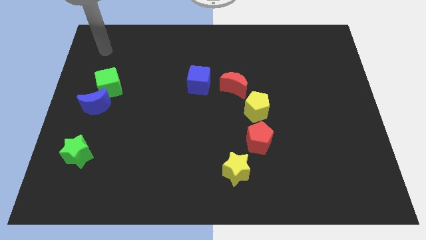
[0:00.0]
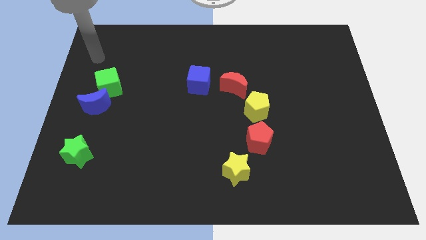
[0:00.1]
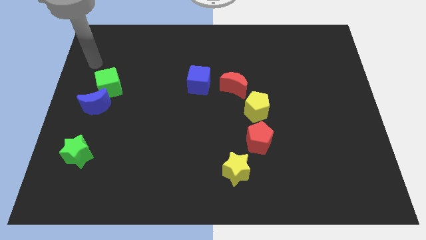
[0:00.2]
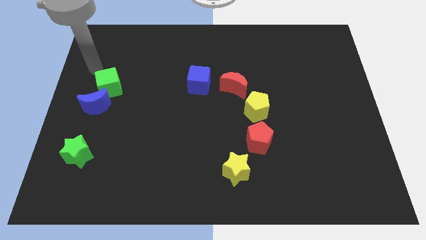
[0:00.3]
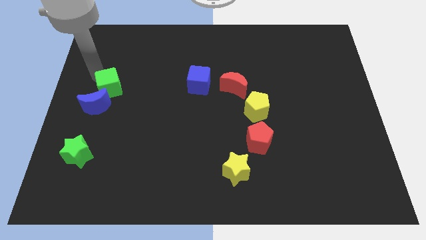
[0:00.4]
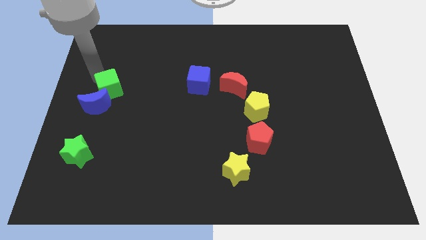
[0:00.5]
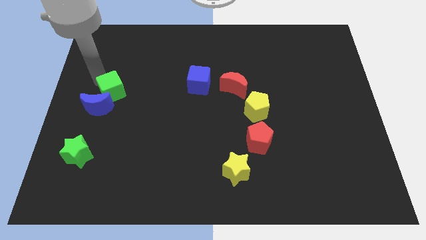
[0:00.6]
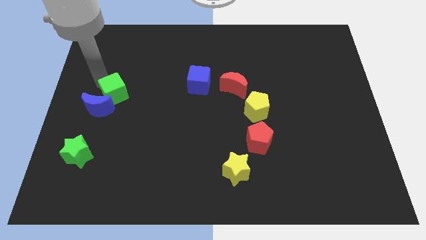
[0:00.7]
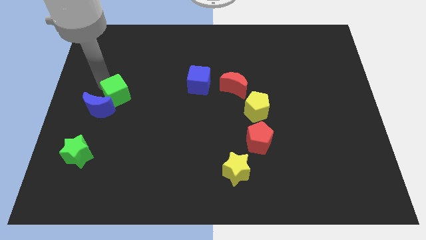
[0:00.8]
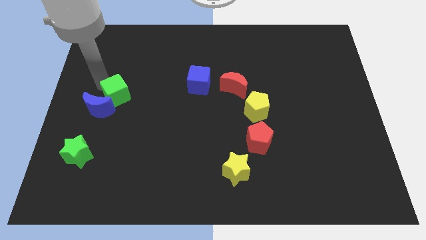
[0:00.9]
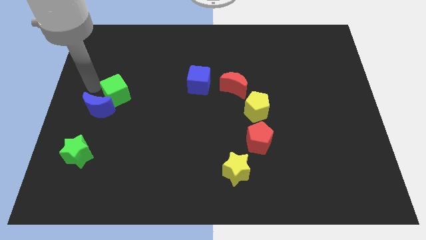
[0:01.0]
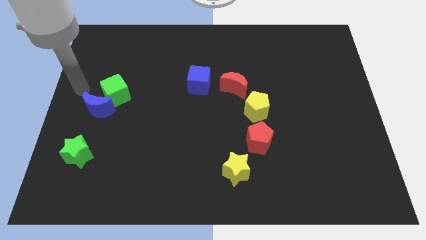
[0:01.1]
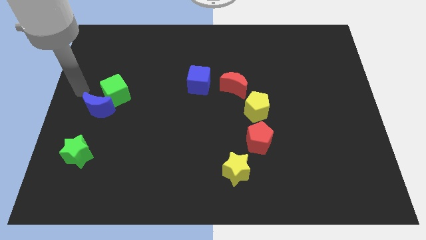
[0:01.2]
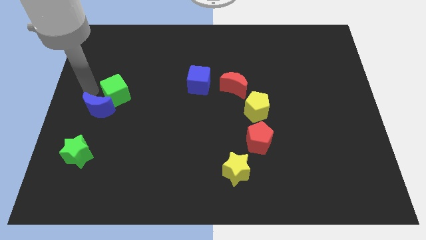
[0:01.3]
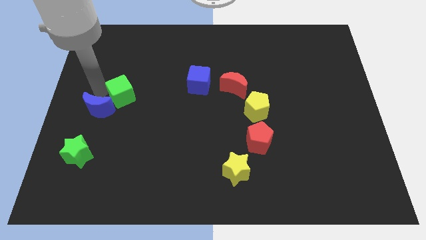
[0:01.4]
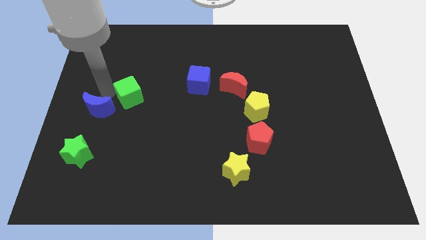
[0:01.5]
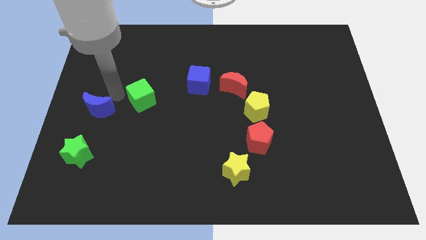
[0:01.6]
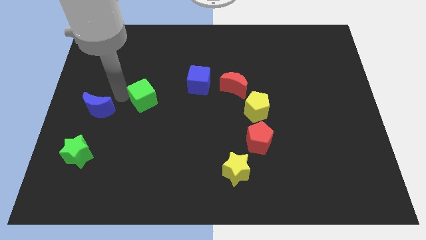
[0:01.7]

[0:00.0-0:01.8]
separate the green cube from the blue crescent

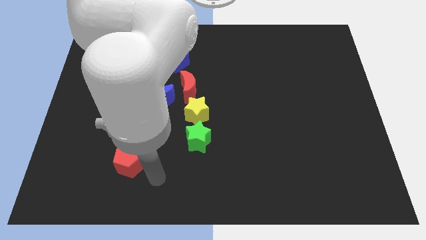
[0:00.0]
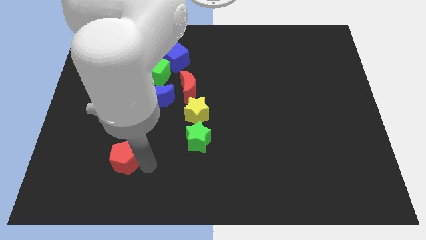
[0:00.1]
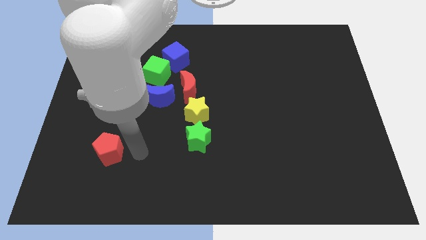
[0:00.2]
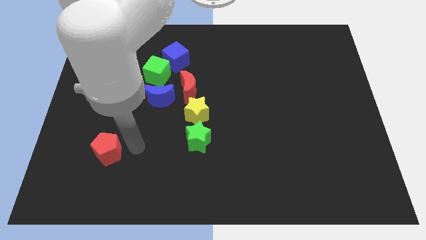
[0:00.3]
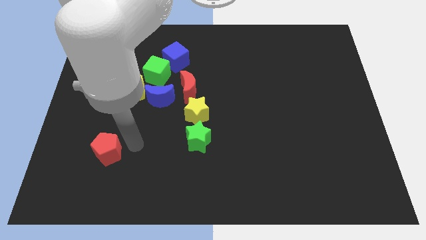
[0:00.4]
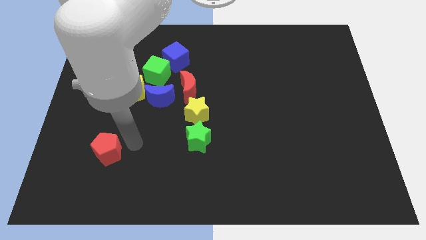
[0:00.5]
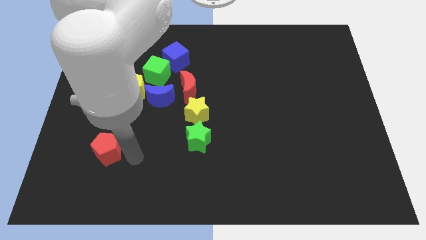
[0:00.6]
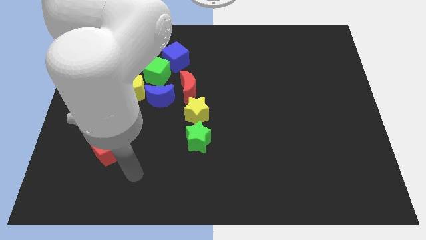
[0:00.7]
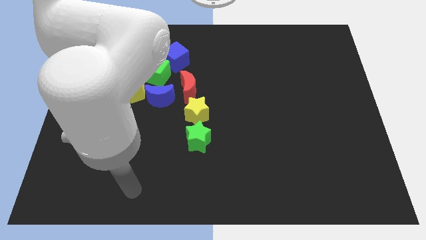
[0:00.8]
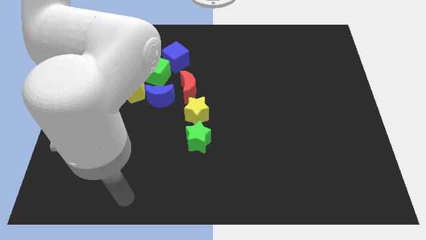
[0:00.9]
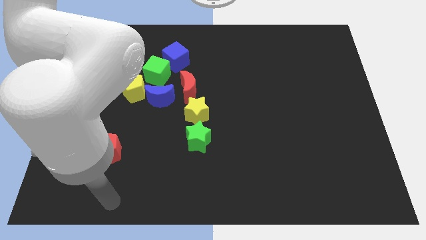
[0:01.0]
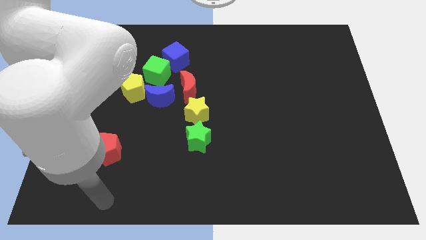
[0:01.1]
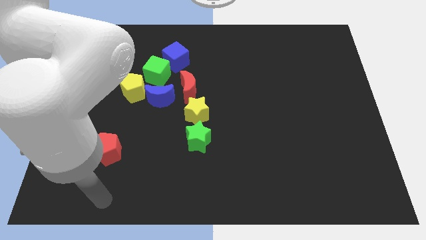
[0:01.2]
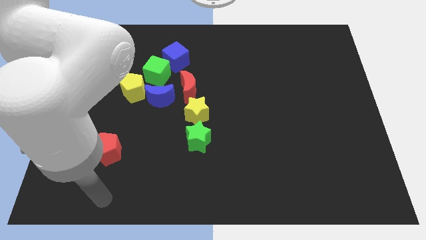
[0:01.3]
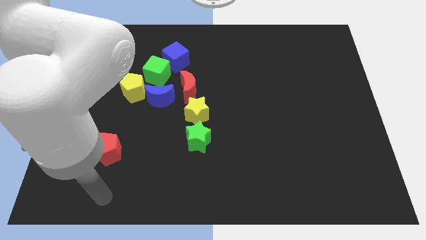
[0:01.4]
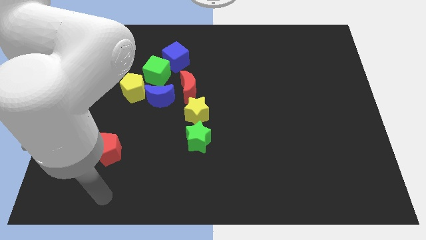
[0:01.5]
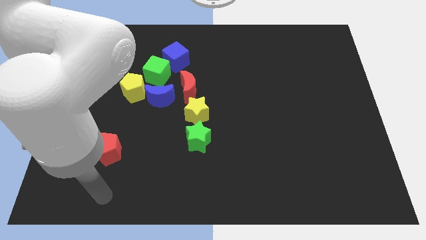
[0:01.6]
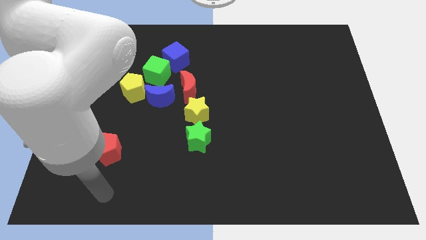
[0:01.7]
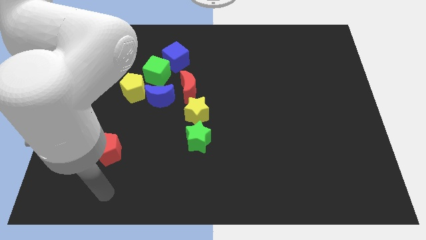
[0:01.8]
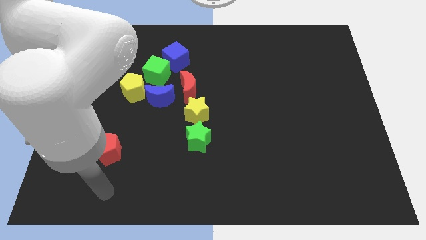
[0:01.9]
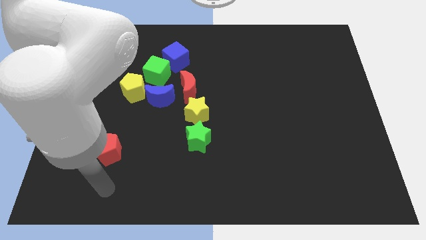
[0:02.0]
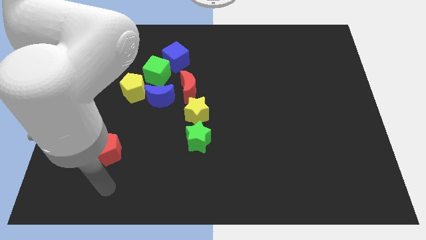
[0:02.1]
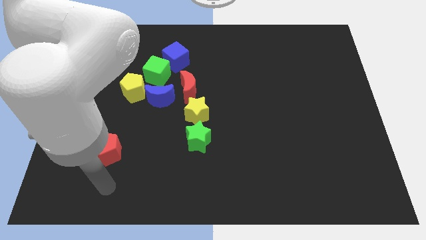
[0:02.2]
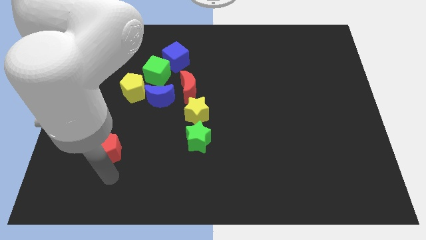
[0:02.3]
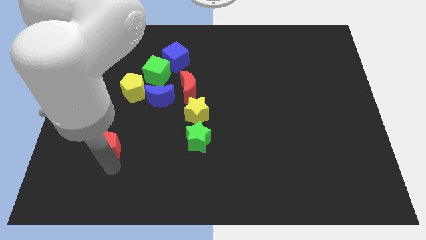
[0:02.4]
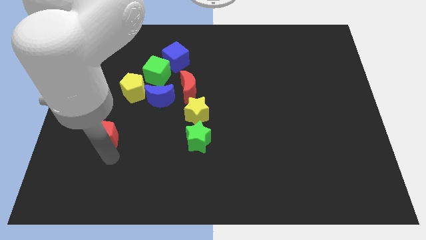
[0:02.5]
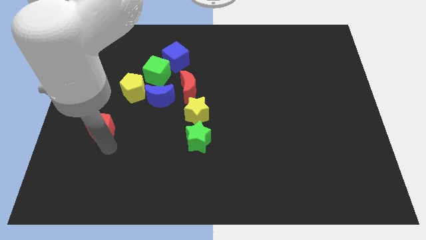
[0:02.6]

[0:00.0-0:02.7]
slide red pentagon to the upward direction

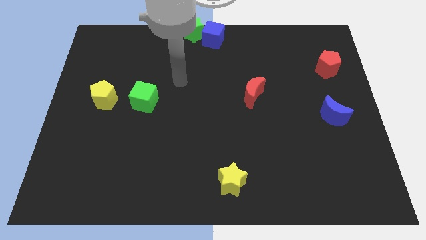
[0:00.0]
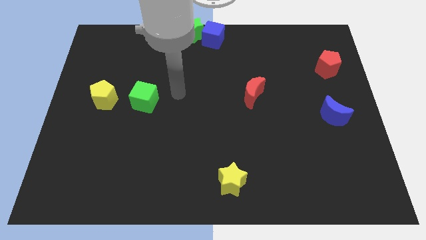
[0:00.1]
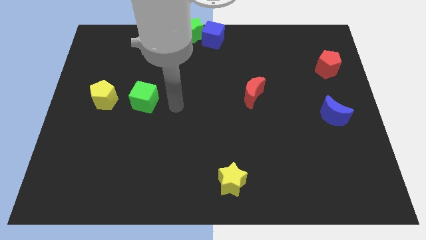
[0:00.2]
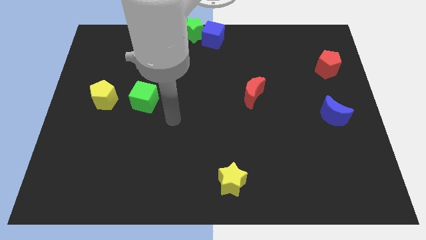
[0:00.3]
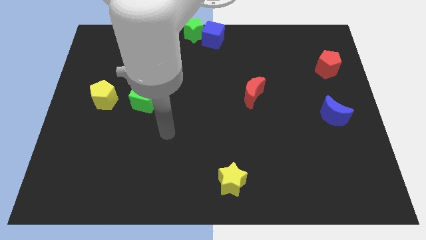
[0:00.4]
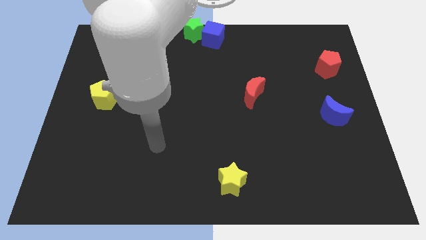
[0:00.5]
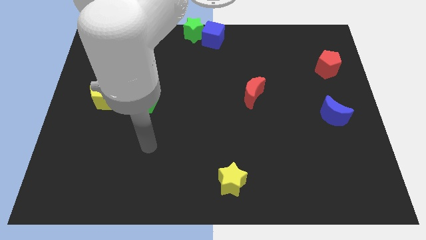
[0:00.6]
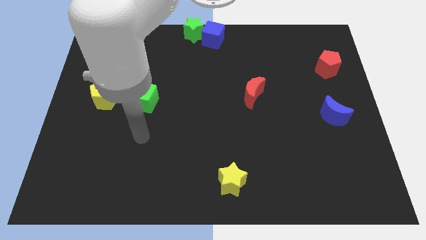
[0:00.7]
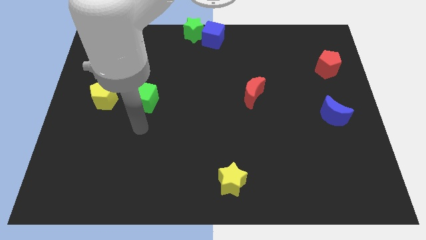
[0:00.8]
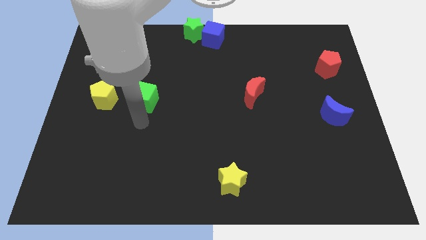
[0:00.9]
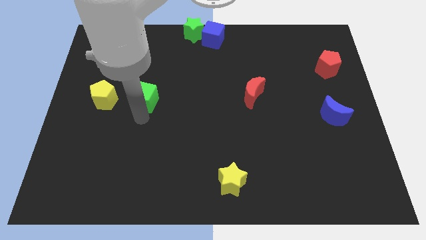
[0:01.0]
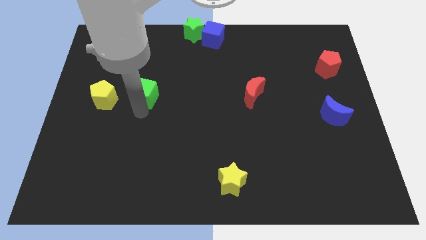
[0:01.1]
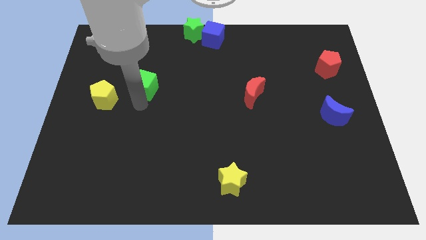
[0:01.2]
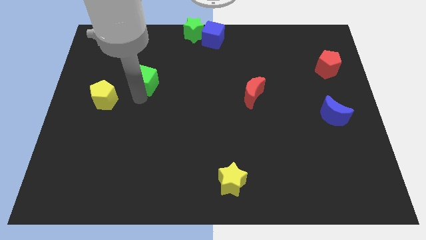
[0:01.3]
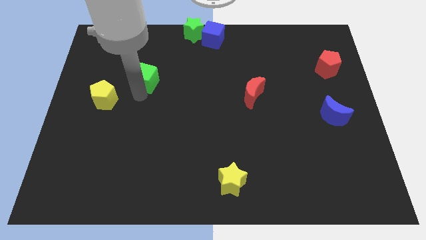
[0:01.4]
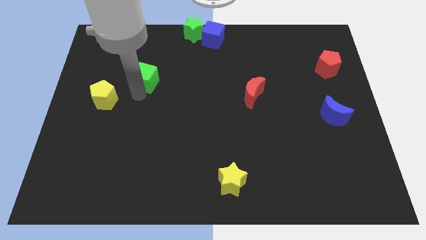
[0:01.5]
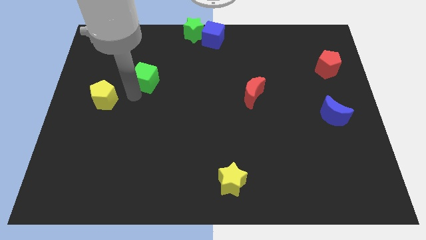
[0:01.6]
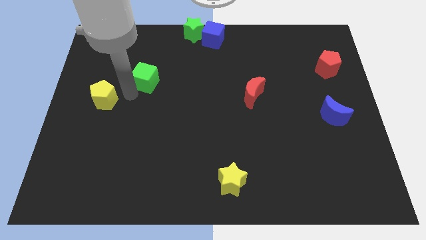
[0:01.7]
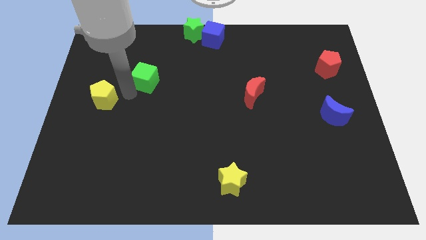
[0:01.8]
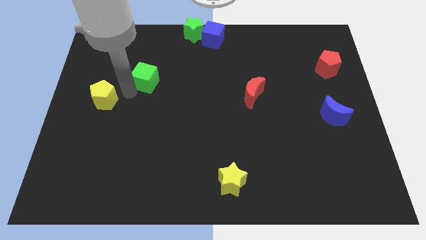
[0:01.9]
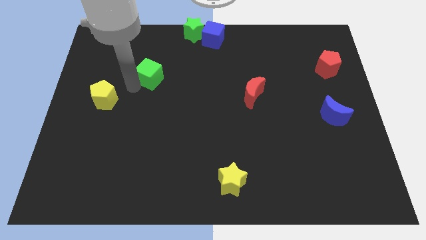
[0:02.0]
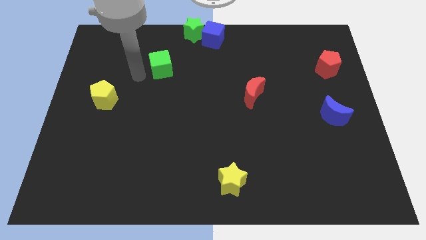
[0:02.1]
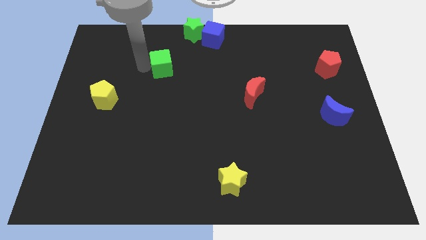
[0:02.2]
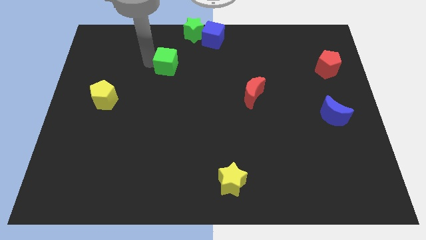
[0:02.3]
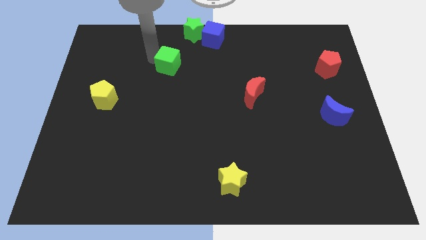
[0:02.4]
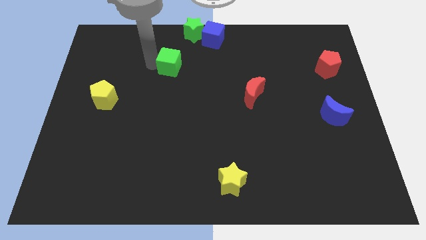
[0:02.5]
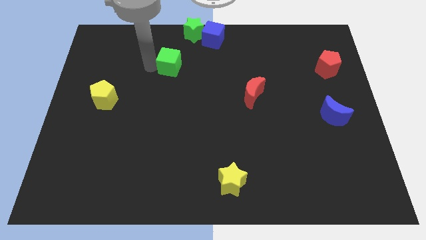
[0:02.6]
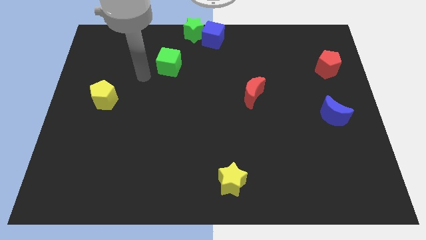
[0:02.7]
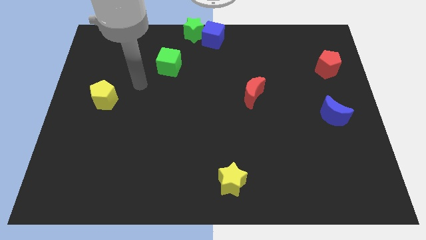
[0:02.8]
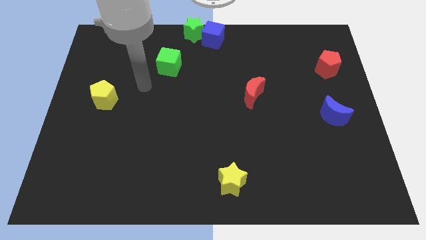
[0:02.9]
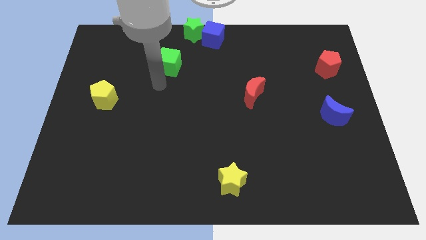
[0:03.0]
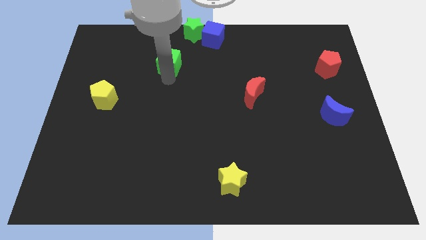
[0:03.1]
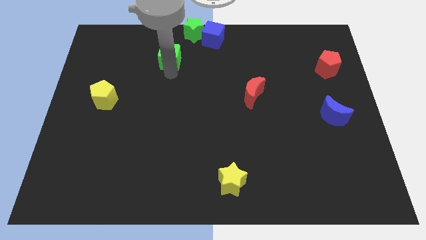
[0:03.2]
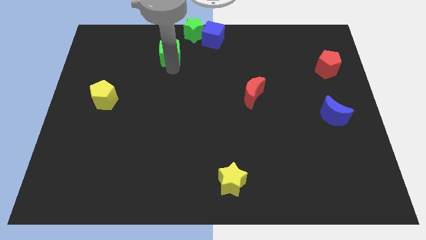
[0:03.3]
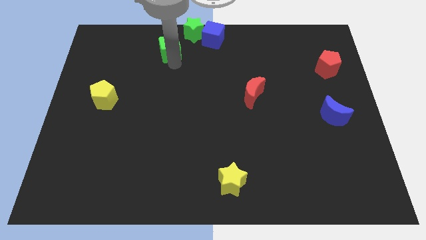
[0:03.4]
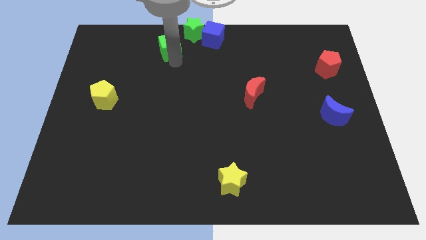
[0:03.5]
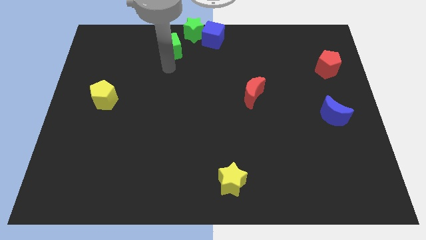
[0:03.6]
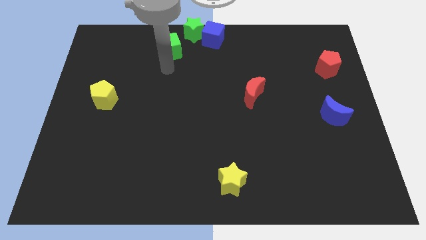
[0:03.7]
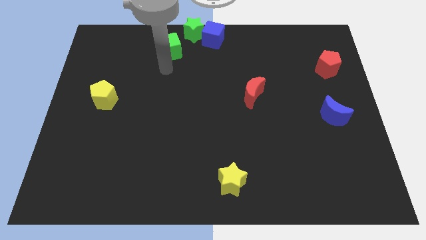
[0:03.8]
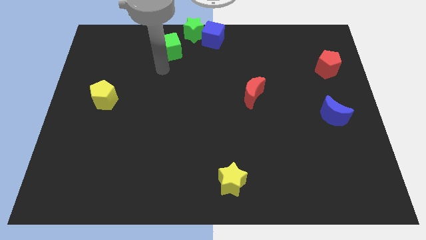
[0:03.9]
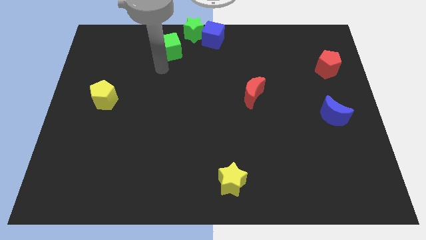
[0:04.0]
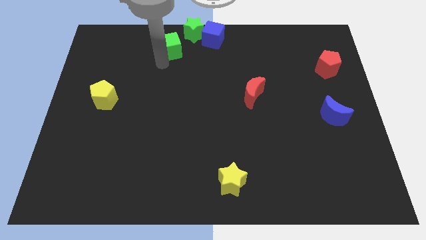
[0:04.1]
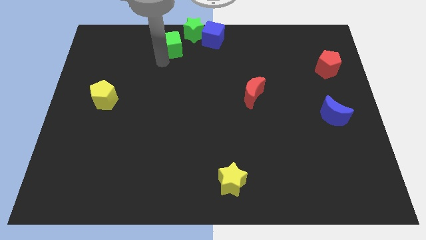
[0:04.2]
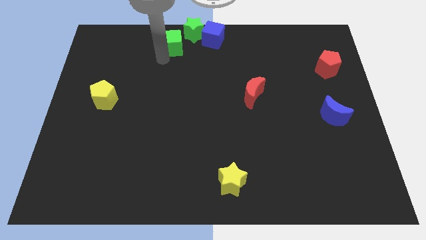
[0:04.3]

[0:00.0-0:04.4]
move the green cube diagonally on the bottom left side of the green star
